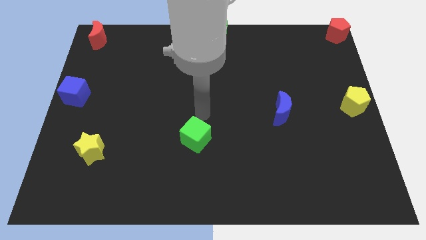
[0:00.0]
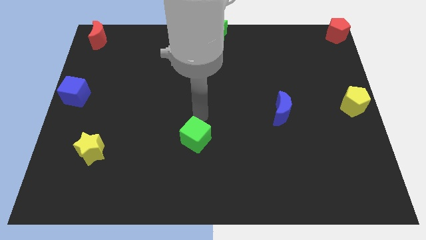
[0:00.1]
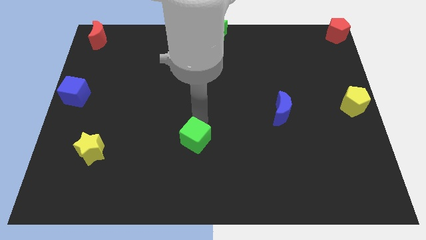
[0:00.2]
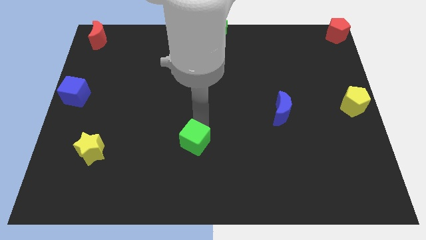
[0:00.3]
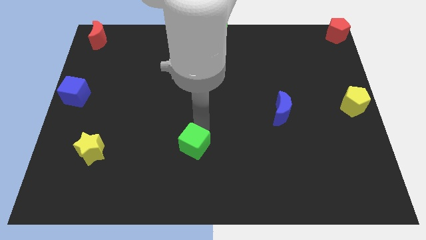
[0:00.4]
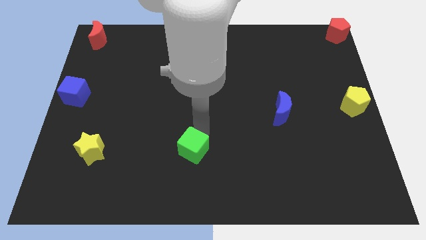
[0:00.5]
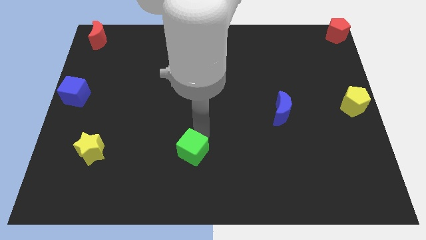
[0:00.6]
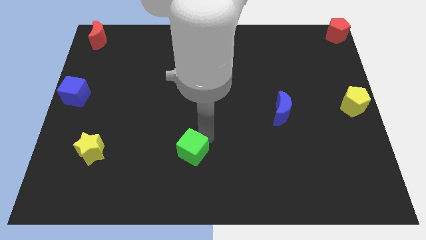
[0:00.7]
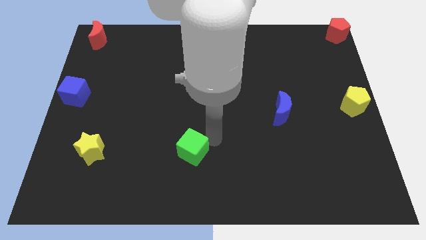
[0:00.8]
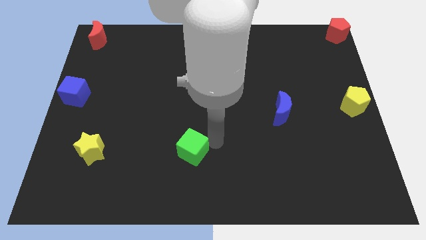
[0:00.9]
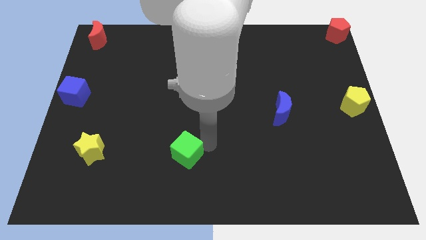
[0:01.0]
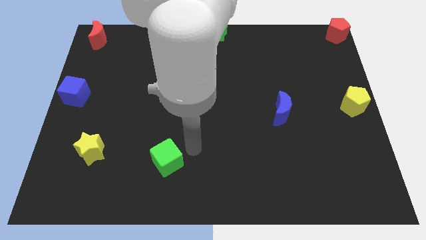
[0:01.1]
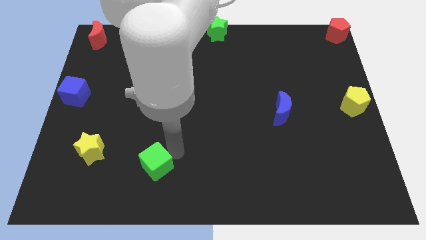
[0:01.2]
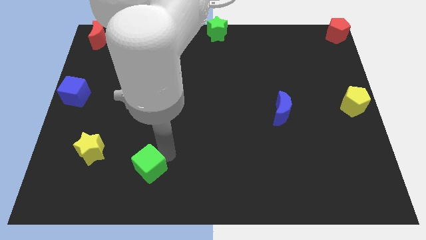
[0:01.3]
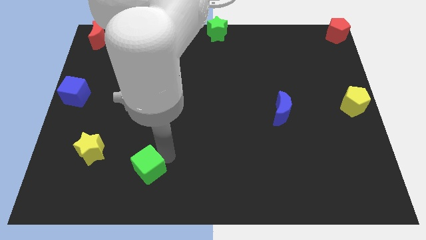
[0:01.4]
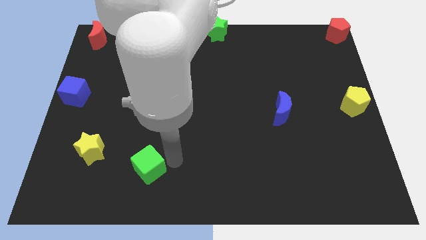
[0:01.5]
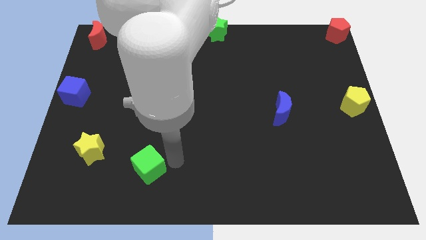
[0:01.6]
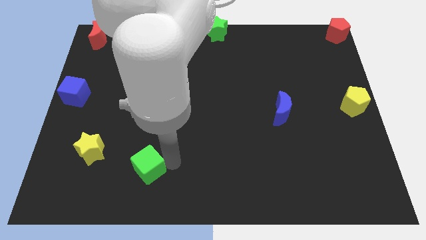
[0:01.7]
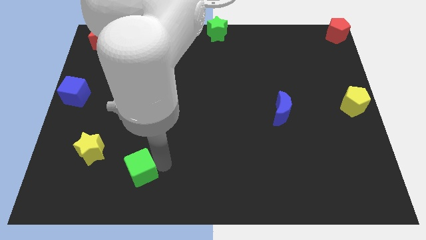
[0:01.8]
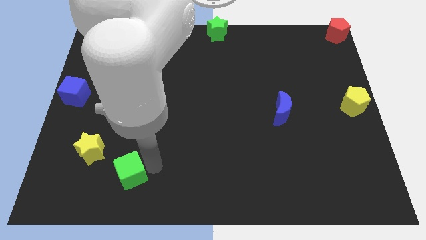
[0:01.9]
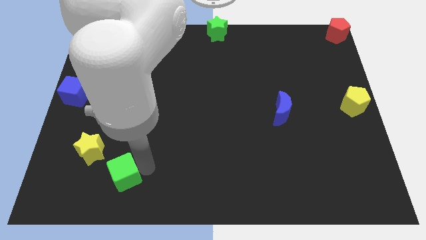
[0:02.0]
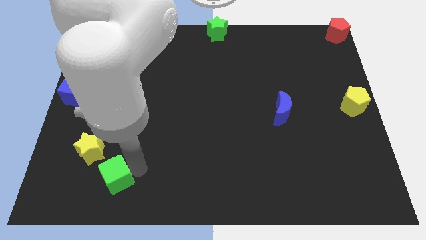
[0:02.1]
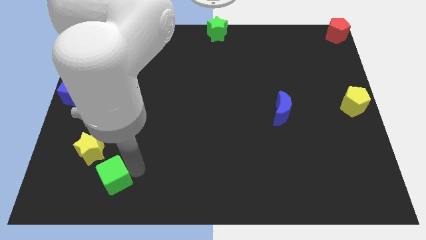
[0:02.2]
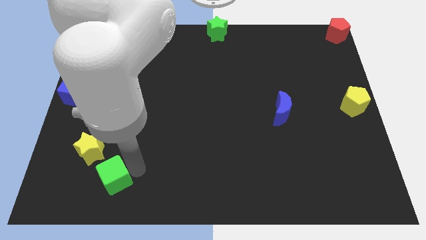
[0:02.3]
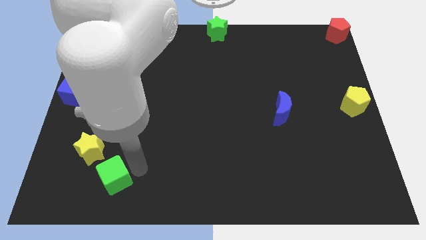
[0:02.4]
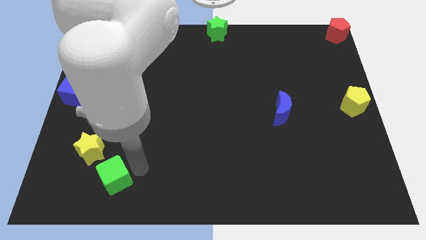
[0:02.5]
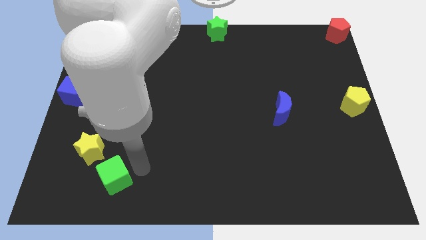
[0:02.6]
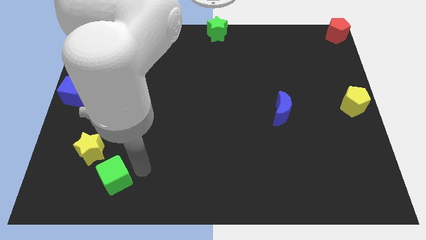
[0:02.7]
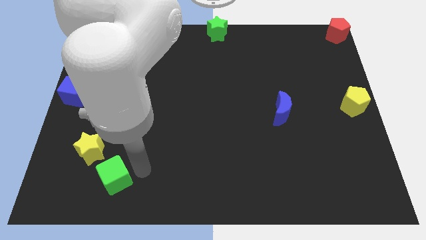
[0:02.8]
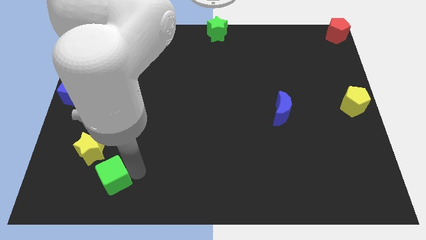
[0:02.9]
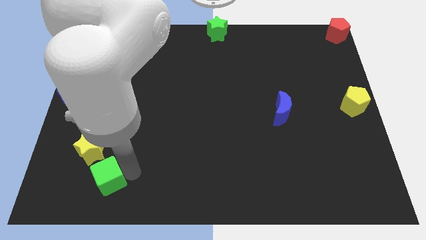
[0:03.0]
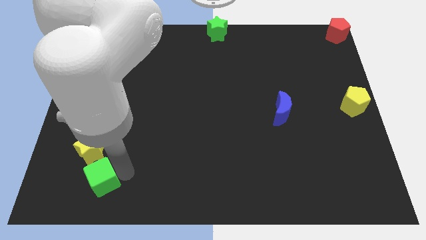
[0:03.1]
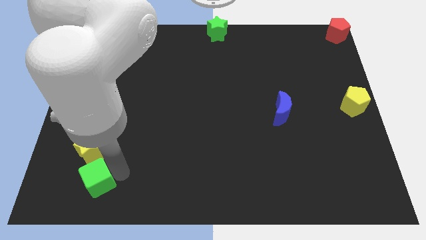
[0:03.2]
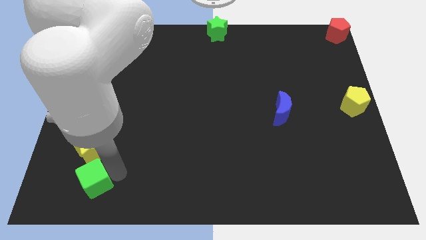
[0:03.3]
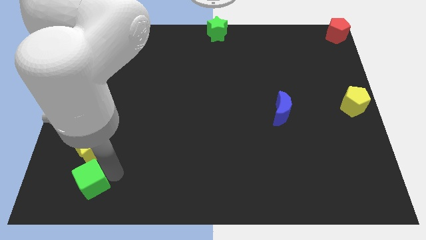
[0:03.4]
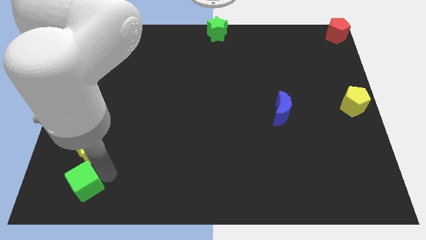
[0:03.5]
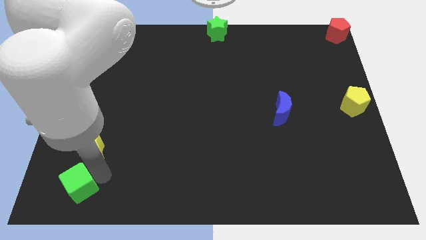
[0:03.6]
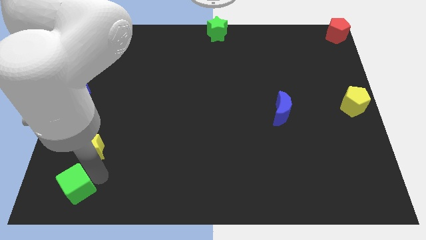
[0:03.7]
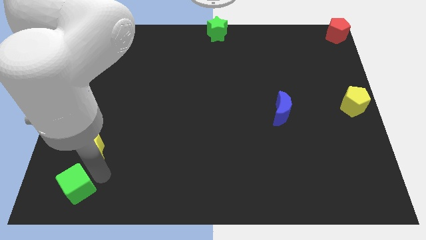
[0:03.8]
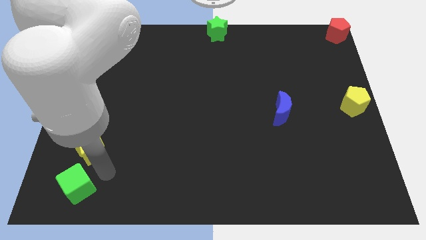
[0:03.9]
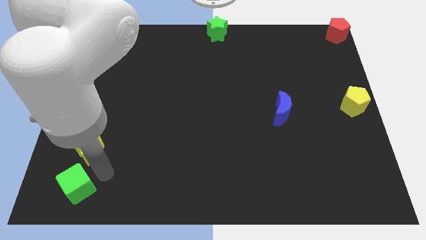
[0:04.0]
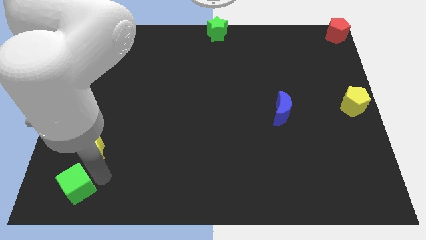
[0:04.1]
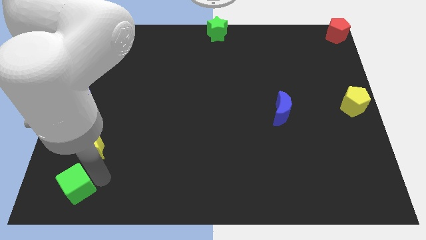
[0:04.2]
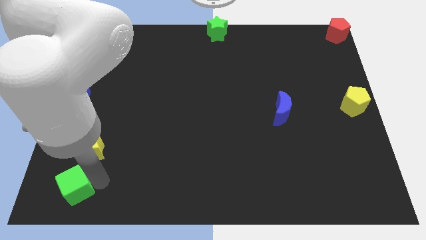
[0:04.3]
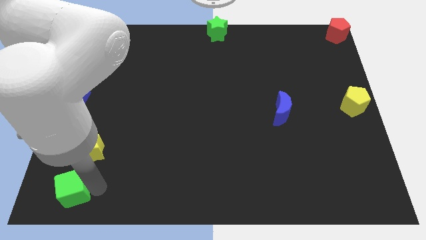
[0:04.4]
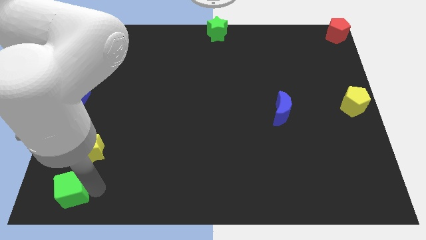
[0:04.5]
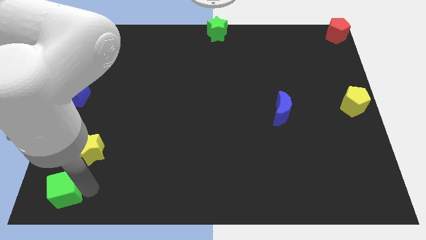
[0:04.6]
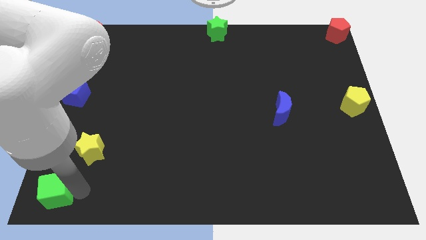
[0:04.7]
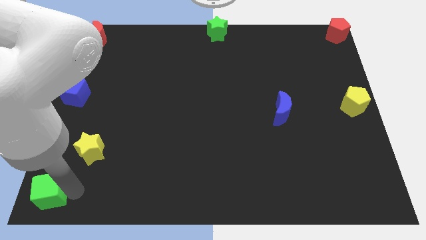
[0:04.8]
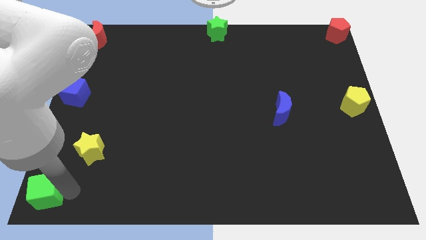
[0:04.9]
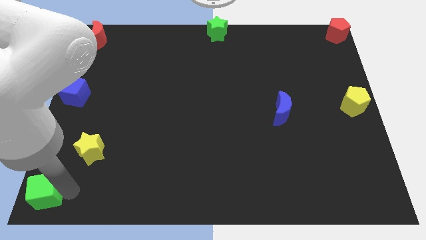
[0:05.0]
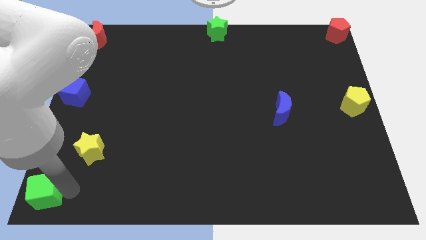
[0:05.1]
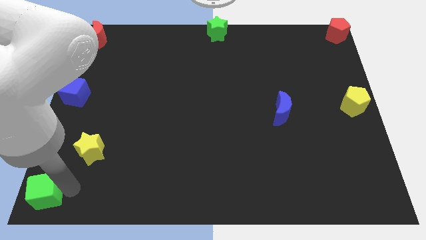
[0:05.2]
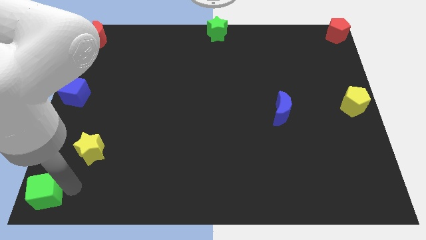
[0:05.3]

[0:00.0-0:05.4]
push the green cube to the bottom left of the board

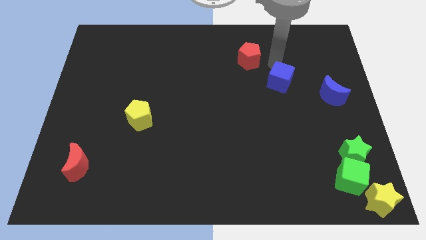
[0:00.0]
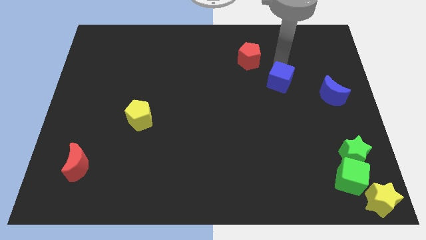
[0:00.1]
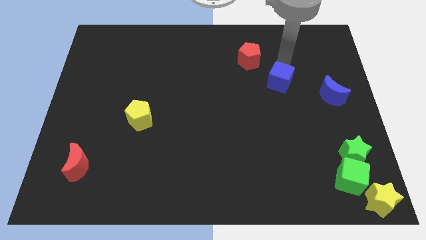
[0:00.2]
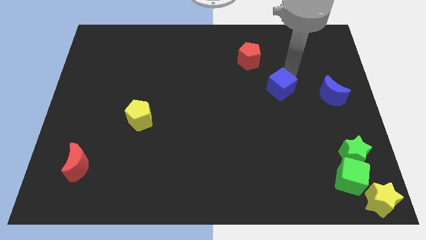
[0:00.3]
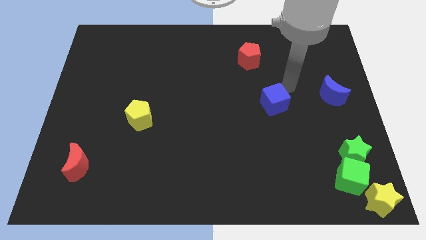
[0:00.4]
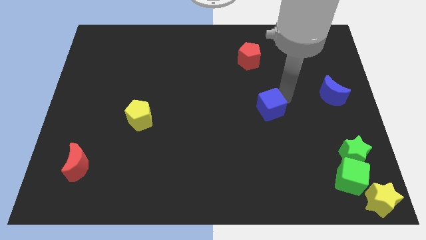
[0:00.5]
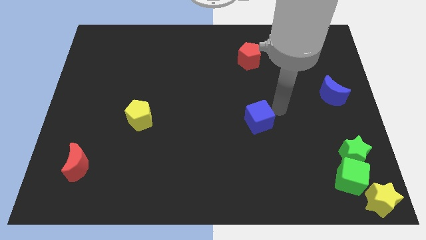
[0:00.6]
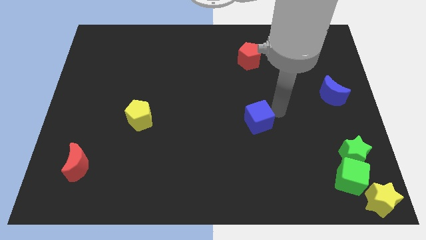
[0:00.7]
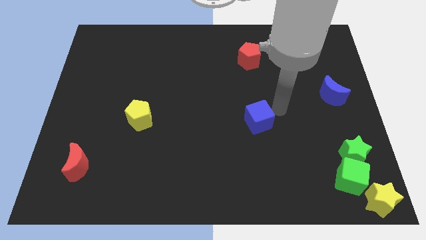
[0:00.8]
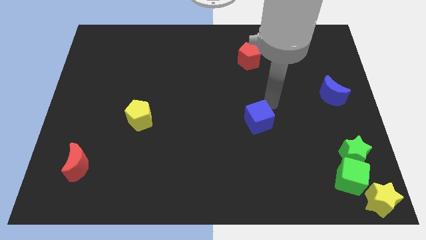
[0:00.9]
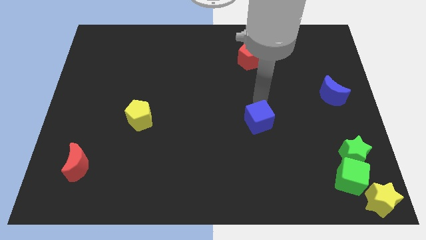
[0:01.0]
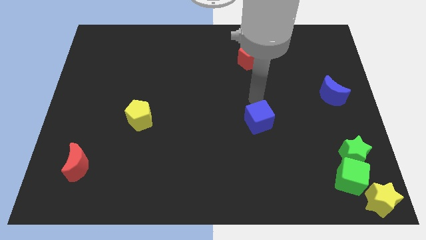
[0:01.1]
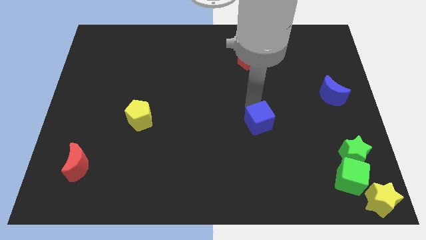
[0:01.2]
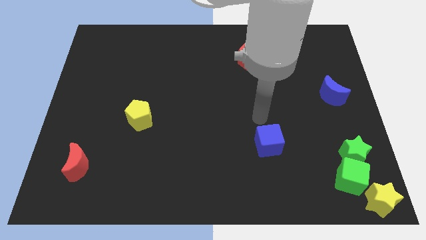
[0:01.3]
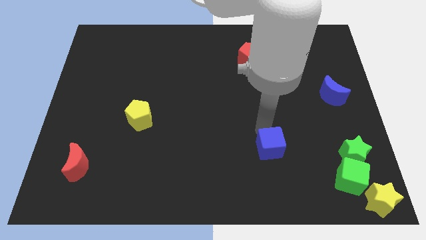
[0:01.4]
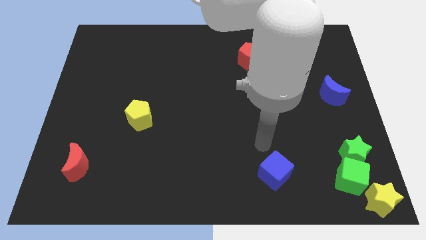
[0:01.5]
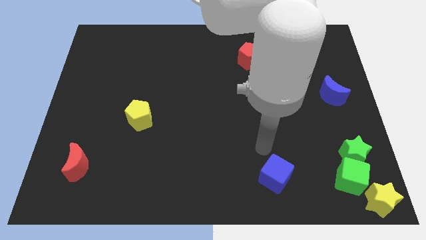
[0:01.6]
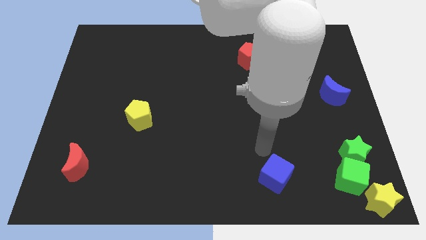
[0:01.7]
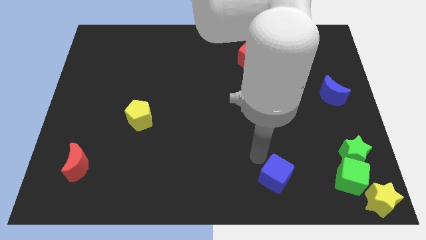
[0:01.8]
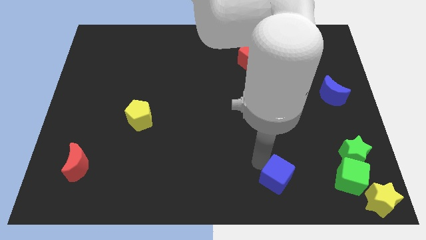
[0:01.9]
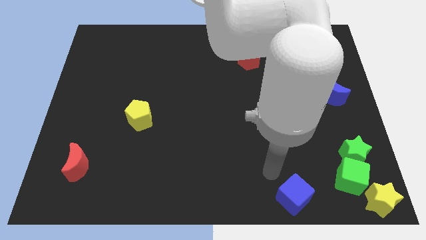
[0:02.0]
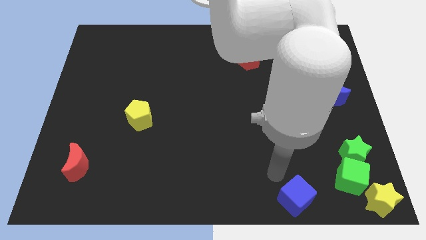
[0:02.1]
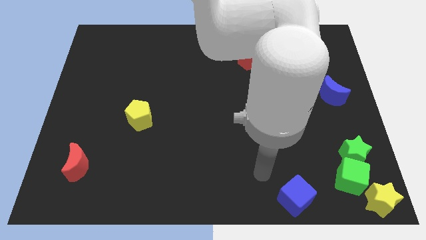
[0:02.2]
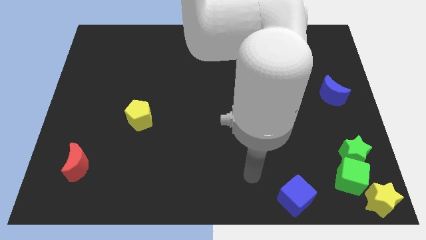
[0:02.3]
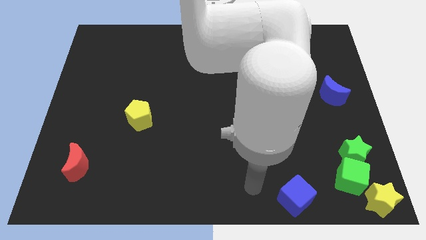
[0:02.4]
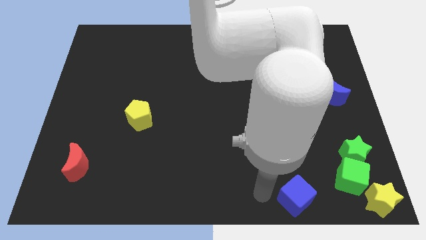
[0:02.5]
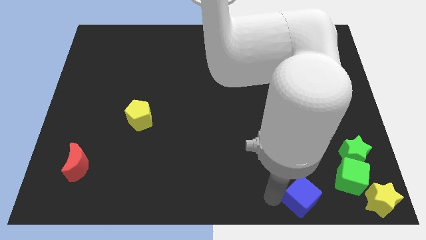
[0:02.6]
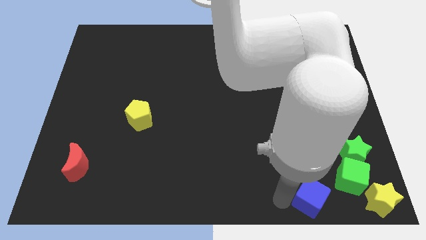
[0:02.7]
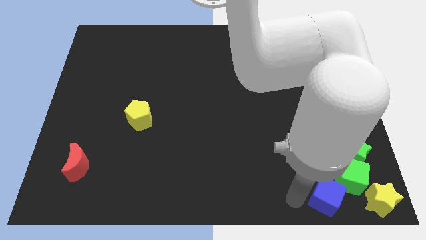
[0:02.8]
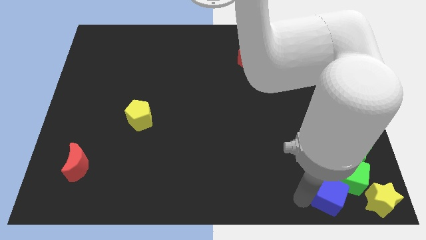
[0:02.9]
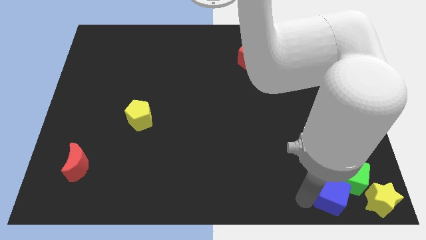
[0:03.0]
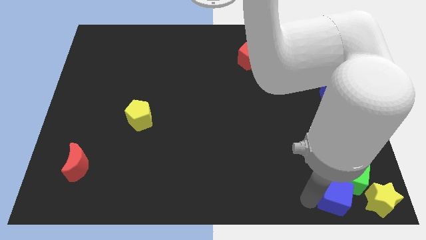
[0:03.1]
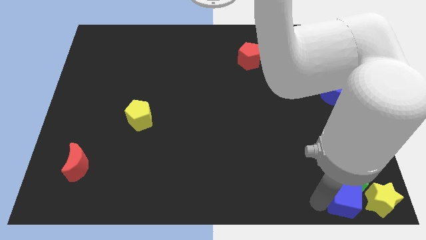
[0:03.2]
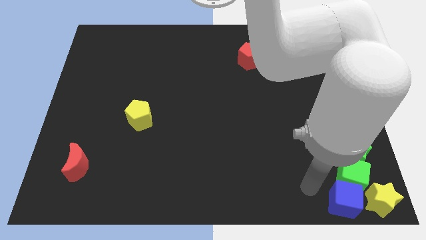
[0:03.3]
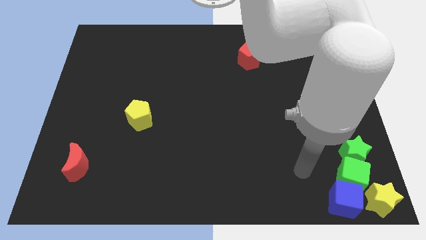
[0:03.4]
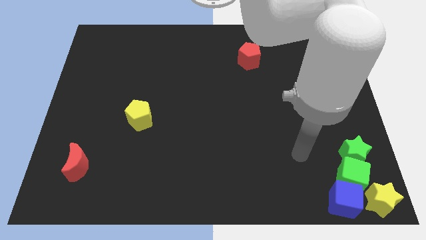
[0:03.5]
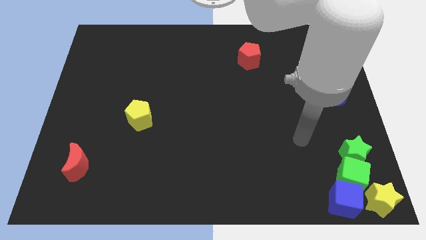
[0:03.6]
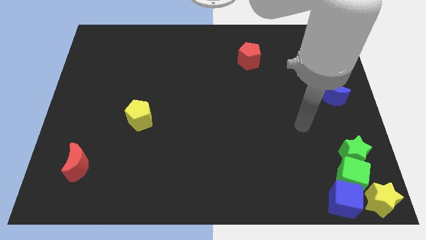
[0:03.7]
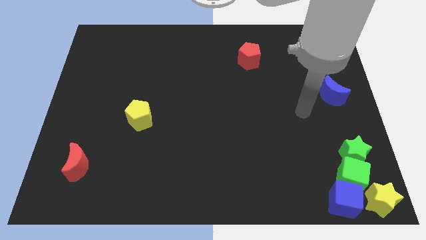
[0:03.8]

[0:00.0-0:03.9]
push blue cube to the bottom right corner of the board
